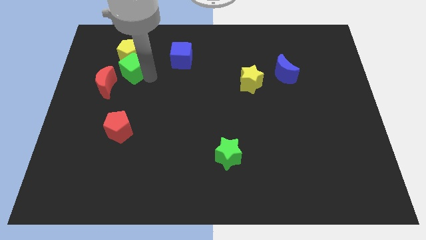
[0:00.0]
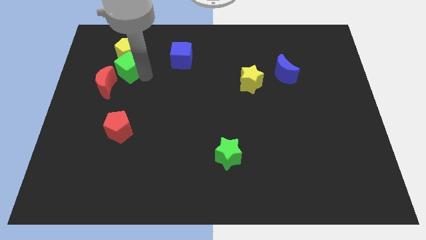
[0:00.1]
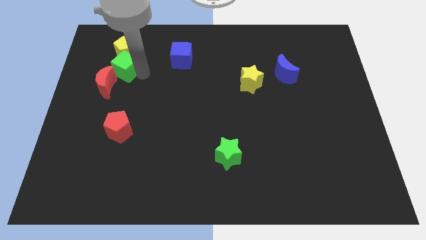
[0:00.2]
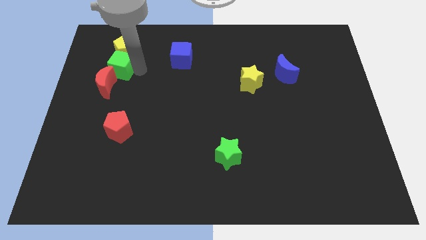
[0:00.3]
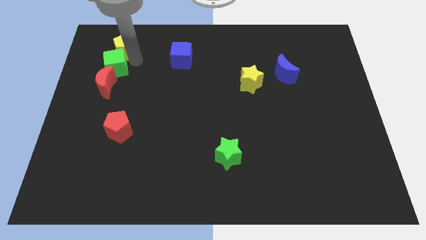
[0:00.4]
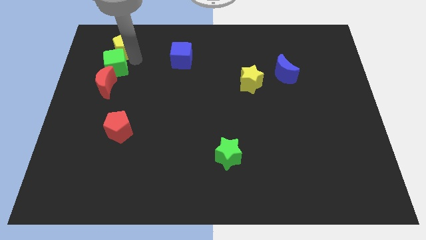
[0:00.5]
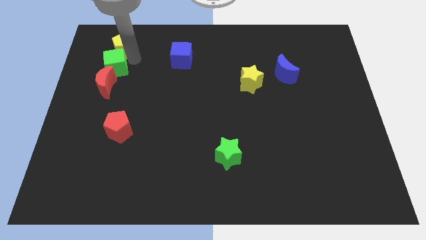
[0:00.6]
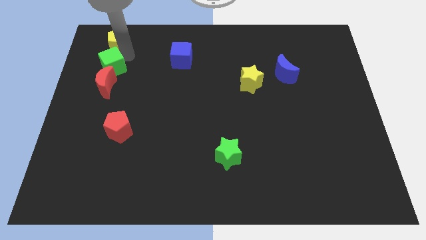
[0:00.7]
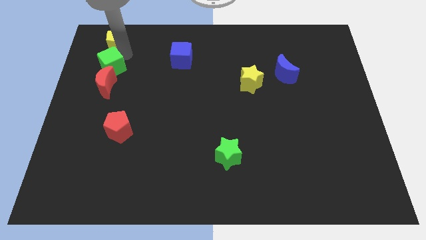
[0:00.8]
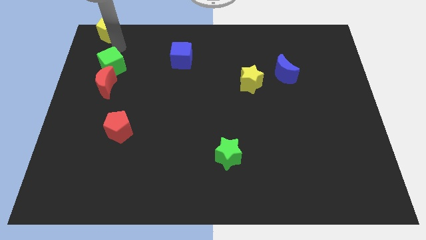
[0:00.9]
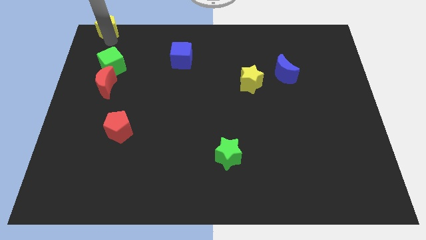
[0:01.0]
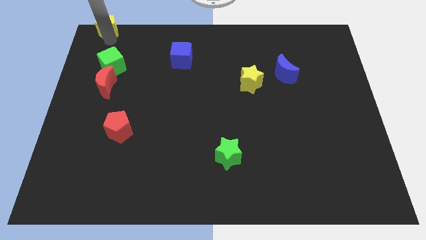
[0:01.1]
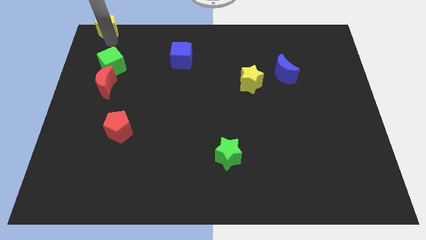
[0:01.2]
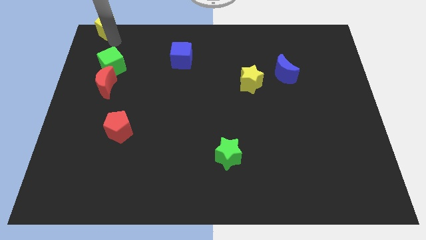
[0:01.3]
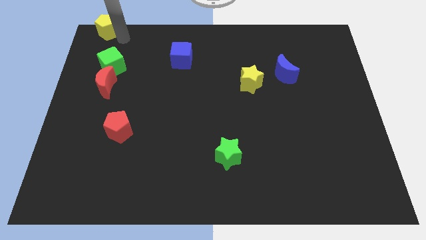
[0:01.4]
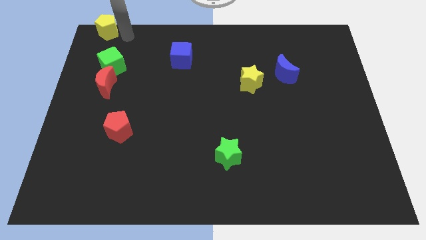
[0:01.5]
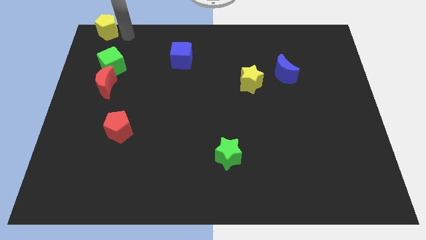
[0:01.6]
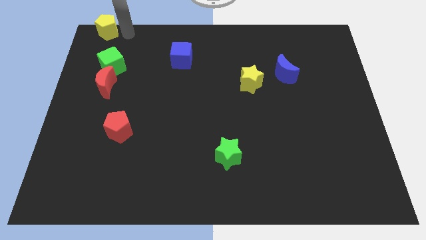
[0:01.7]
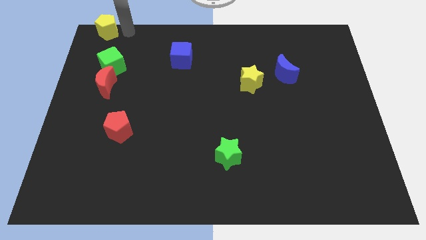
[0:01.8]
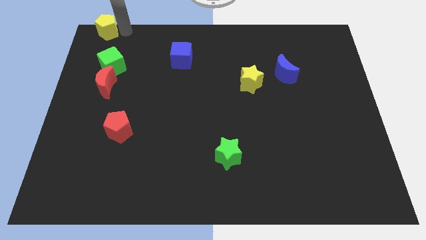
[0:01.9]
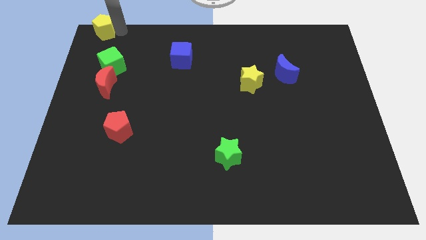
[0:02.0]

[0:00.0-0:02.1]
move the yellow pentagon towards the top left corner of the board

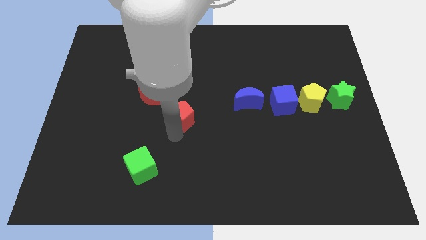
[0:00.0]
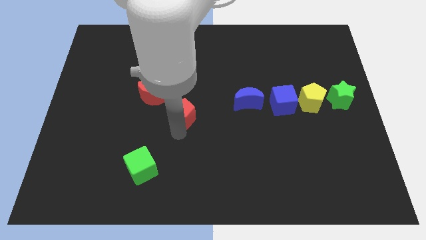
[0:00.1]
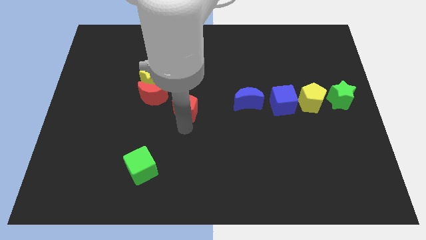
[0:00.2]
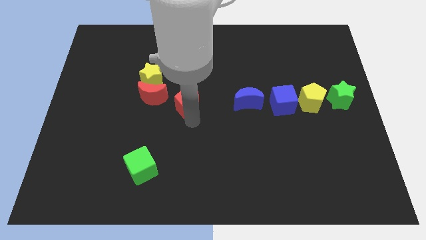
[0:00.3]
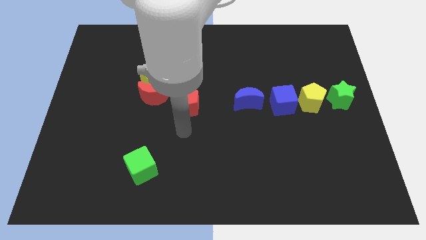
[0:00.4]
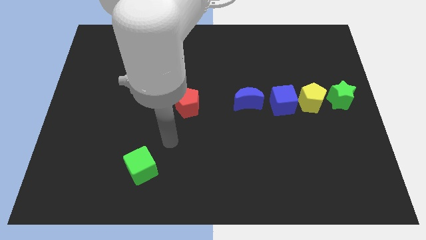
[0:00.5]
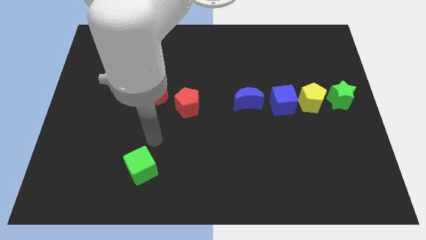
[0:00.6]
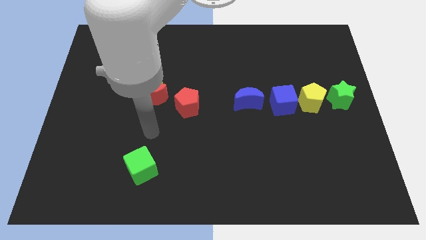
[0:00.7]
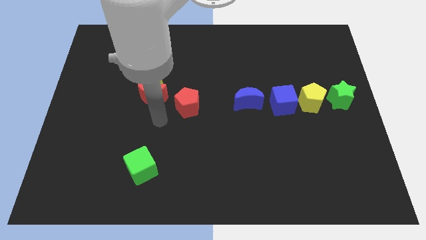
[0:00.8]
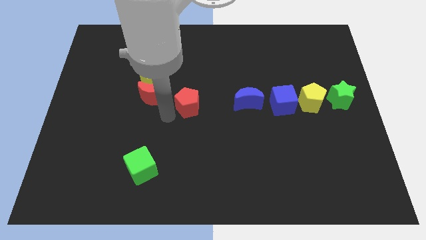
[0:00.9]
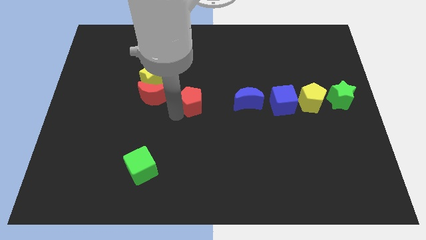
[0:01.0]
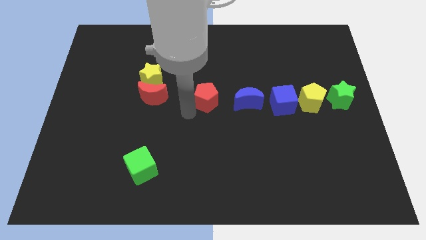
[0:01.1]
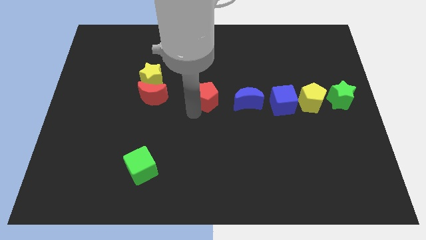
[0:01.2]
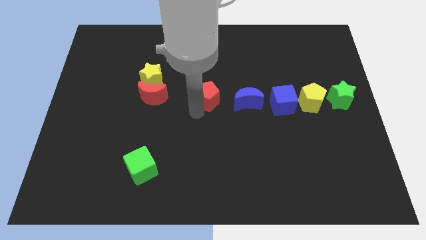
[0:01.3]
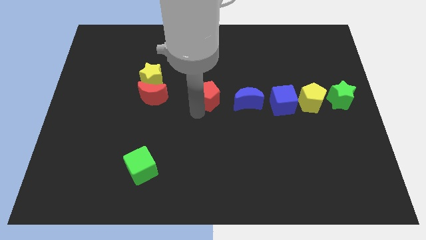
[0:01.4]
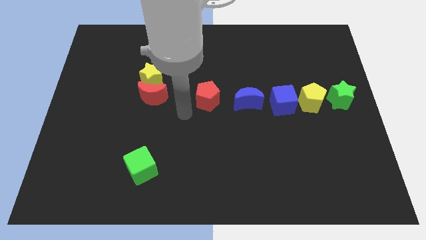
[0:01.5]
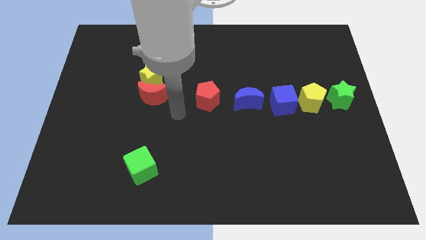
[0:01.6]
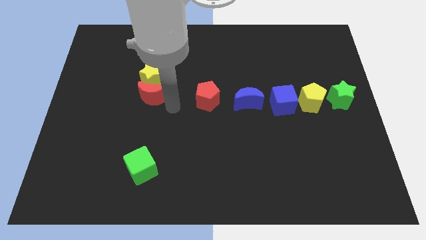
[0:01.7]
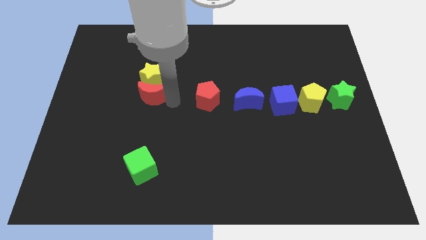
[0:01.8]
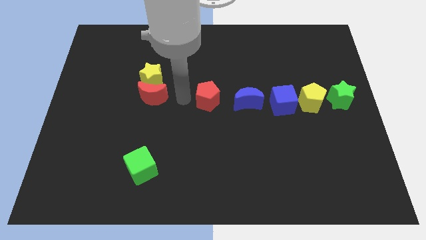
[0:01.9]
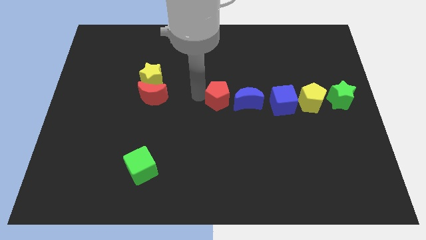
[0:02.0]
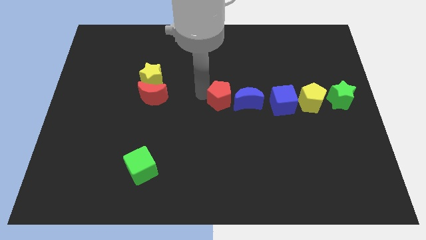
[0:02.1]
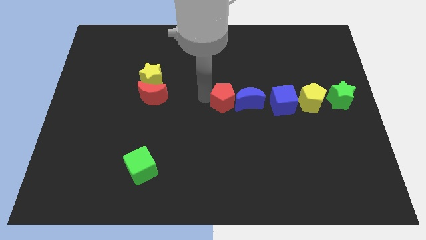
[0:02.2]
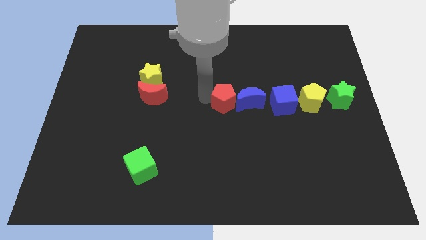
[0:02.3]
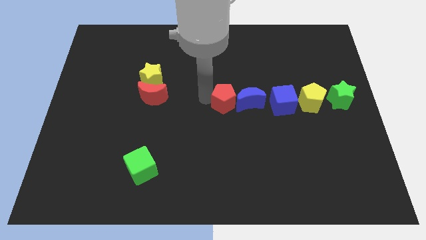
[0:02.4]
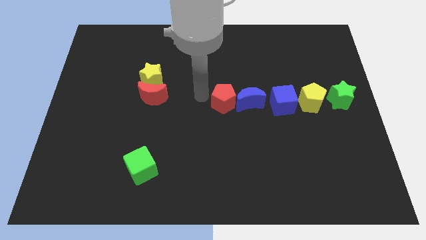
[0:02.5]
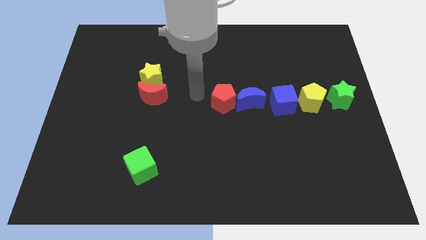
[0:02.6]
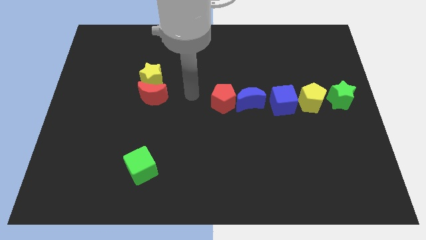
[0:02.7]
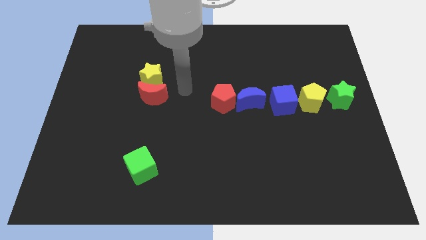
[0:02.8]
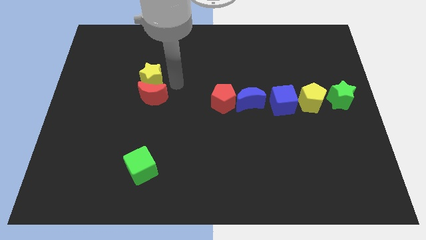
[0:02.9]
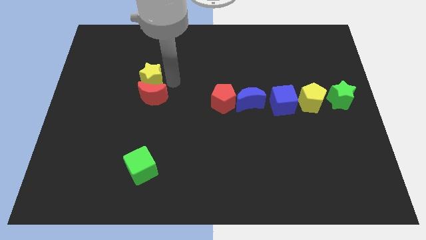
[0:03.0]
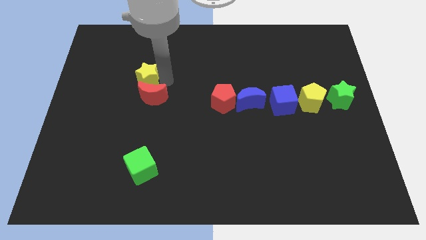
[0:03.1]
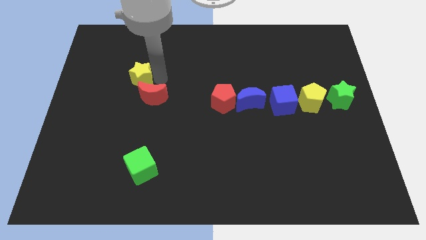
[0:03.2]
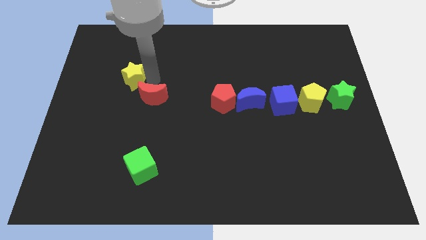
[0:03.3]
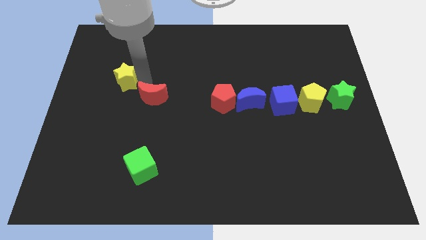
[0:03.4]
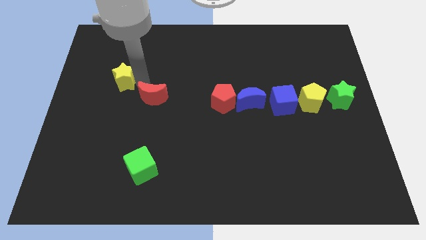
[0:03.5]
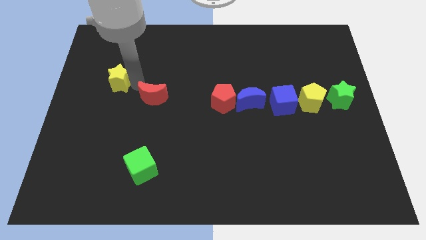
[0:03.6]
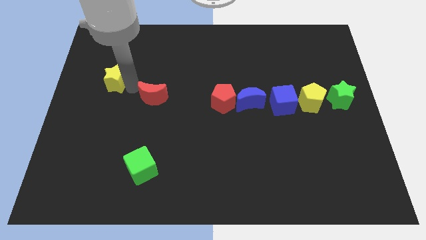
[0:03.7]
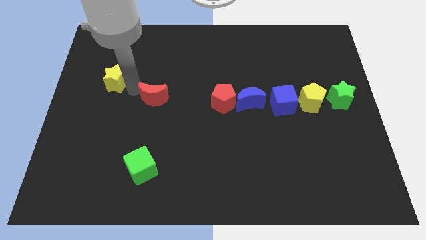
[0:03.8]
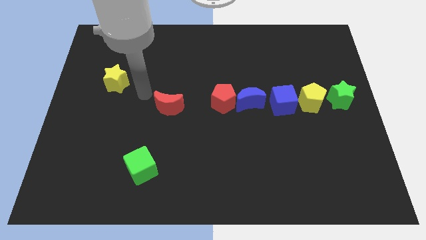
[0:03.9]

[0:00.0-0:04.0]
separate the yellow star and red moon

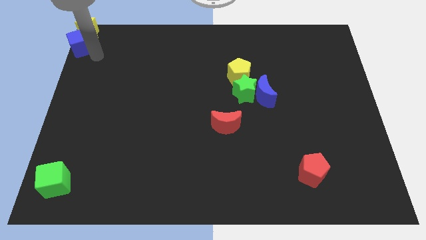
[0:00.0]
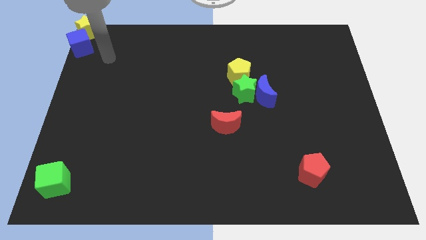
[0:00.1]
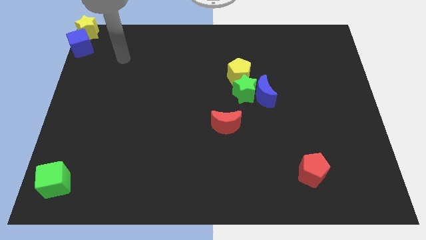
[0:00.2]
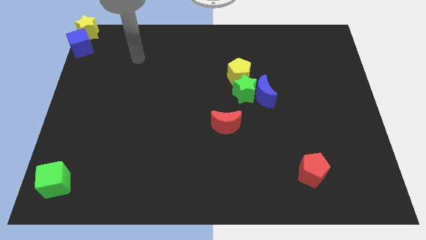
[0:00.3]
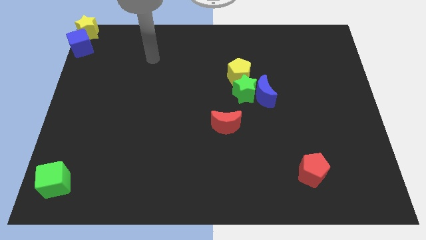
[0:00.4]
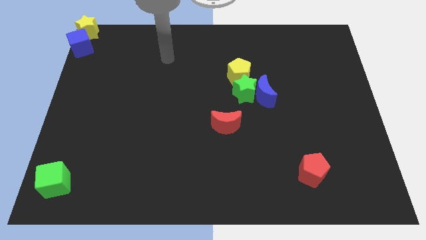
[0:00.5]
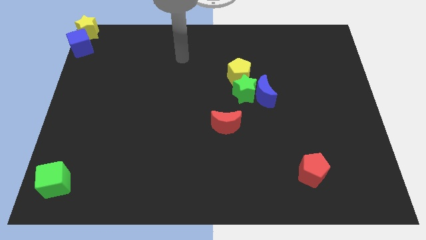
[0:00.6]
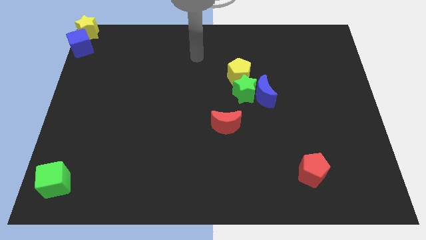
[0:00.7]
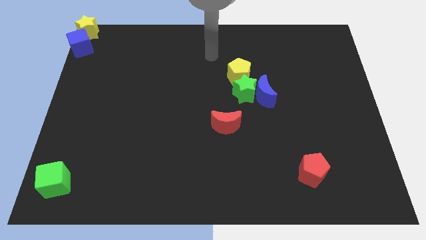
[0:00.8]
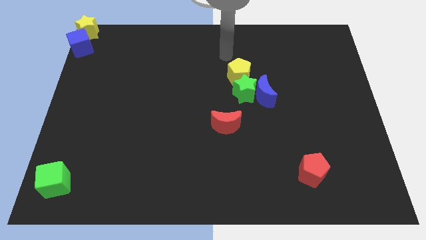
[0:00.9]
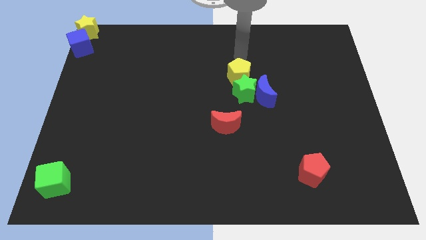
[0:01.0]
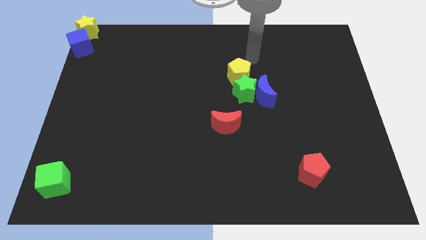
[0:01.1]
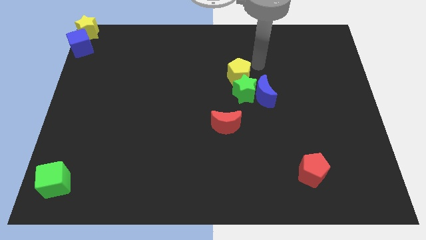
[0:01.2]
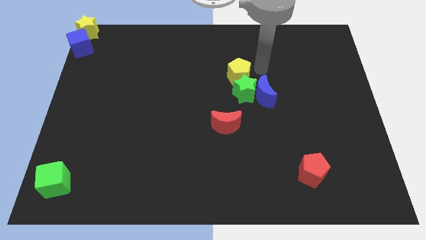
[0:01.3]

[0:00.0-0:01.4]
move your arm towards the yellow pentagon

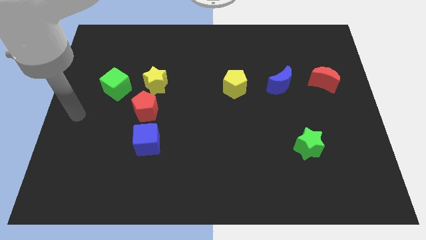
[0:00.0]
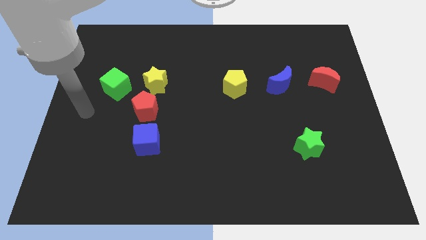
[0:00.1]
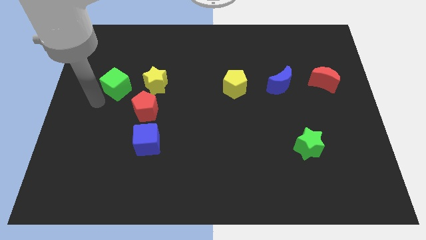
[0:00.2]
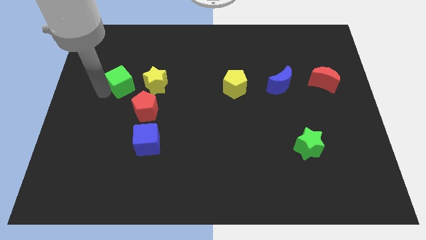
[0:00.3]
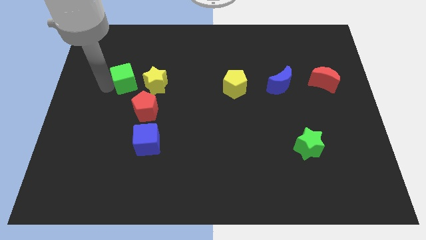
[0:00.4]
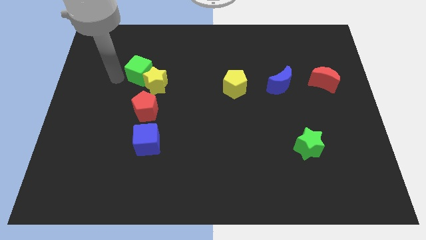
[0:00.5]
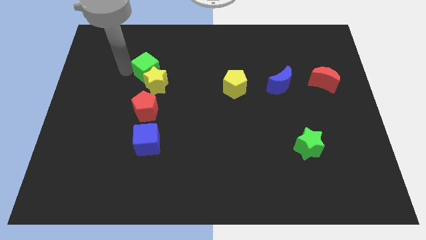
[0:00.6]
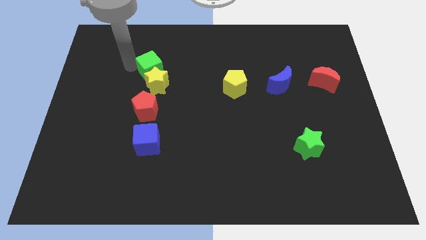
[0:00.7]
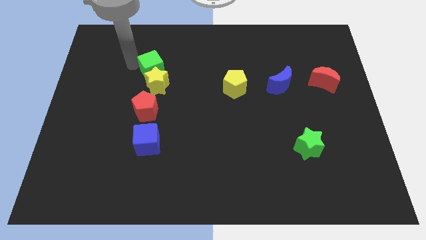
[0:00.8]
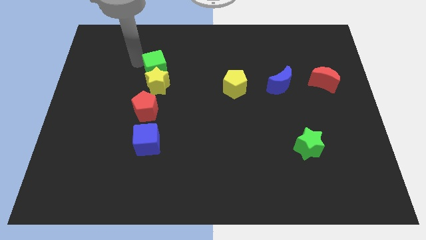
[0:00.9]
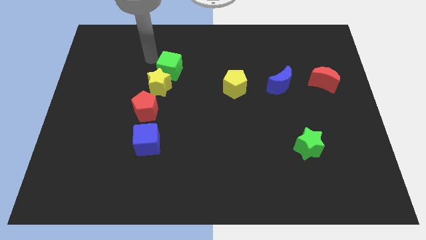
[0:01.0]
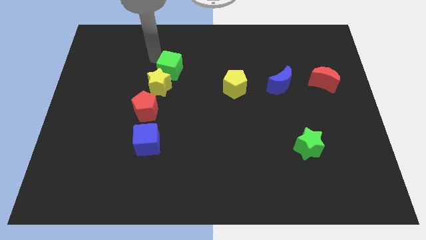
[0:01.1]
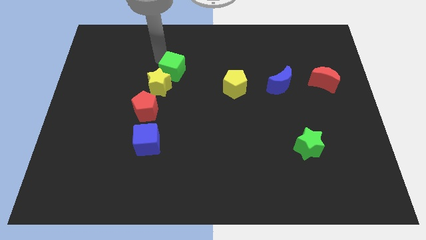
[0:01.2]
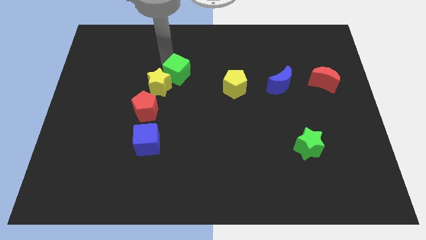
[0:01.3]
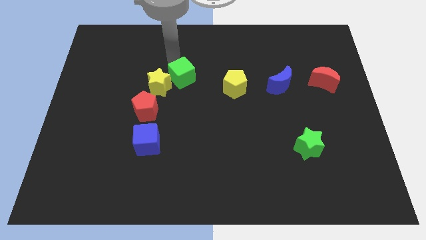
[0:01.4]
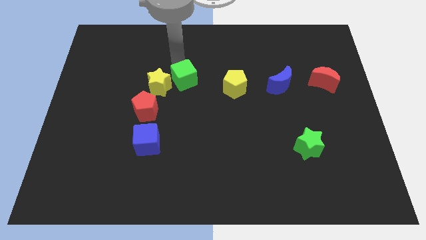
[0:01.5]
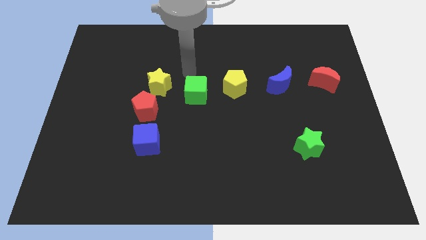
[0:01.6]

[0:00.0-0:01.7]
place the green cube in between the yellow blocks
